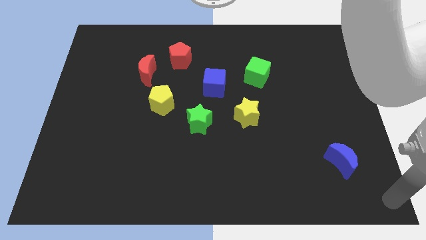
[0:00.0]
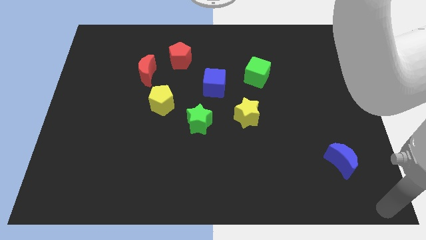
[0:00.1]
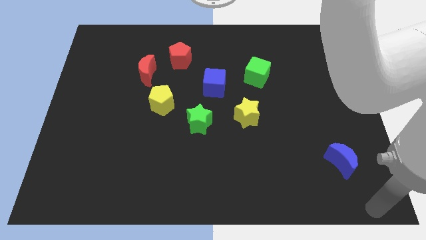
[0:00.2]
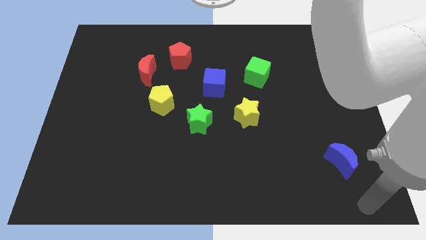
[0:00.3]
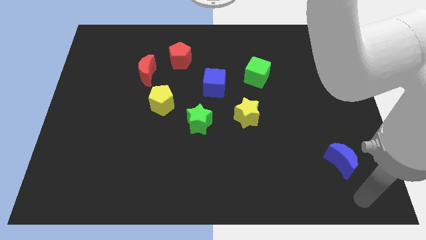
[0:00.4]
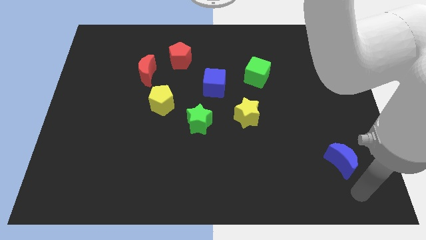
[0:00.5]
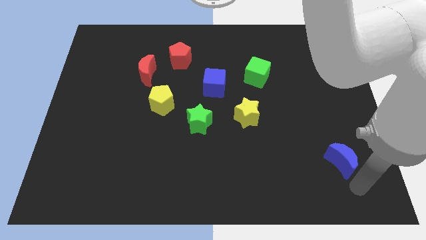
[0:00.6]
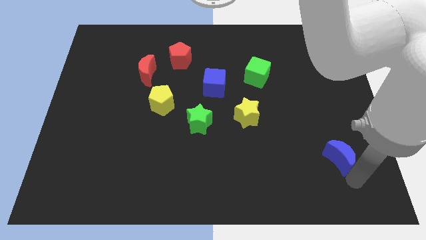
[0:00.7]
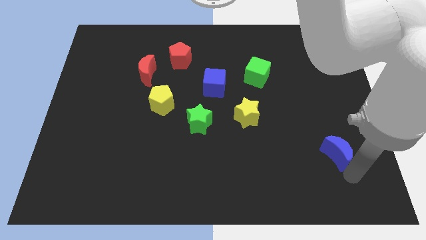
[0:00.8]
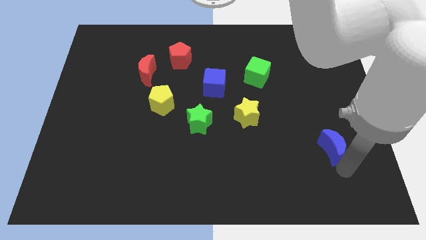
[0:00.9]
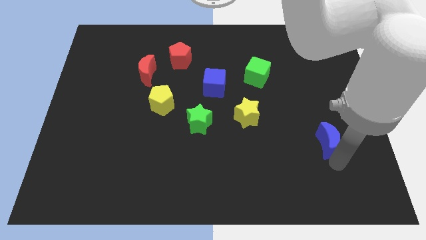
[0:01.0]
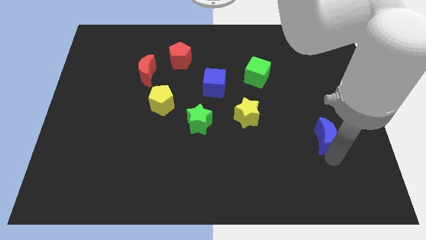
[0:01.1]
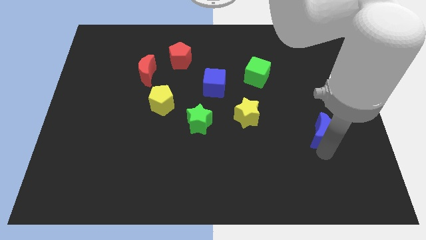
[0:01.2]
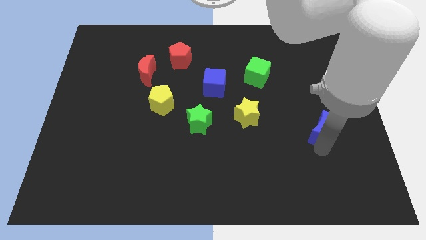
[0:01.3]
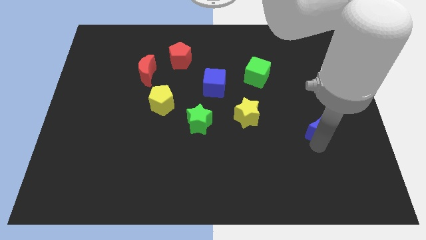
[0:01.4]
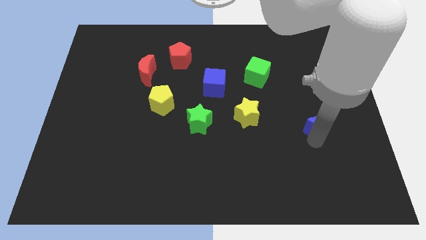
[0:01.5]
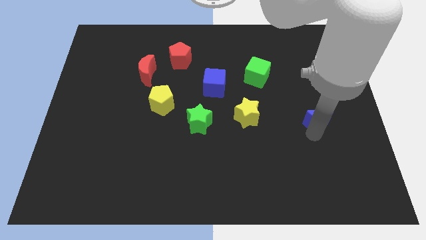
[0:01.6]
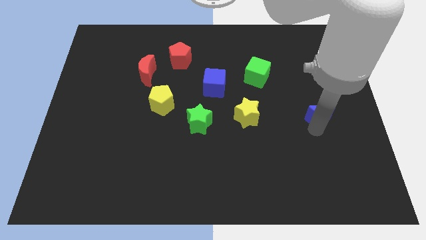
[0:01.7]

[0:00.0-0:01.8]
move the blue moon to the right of yellow star

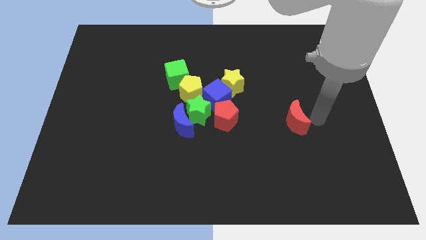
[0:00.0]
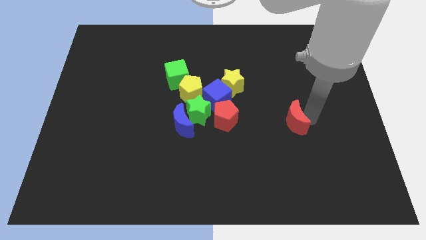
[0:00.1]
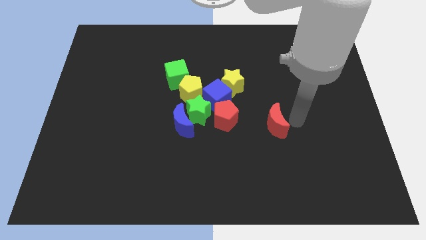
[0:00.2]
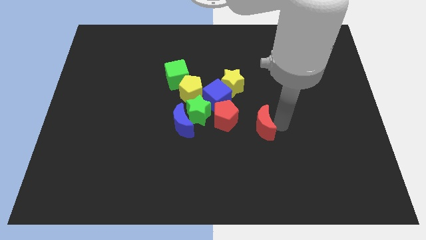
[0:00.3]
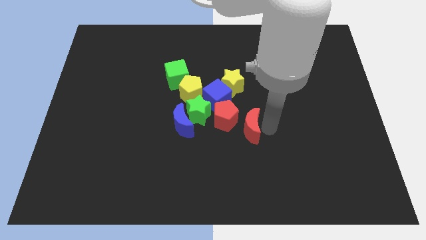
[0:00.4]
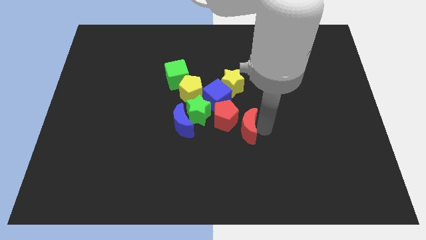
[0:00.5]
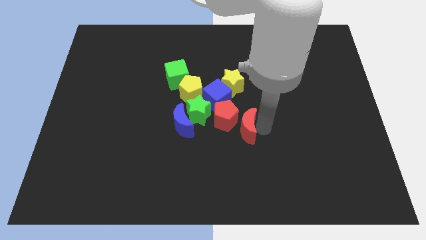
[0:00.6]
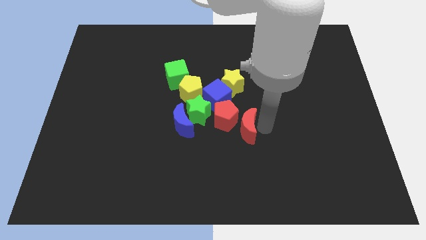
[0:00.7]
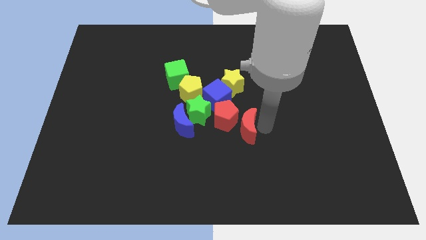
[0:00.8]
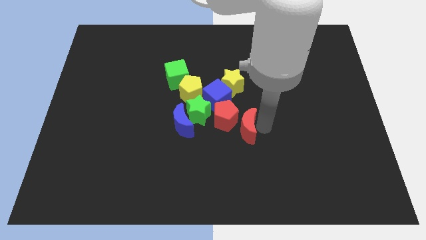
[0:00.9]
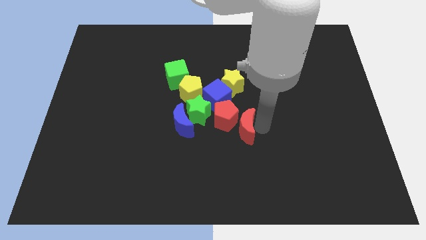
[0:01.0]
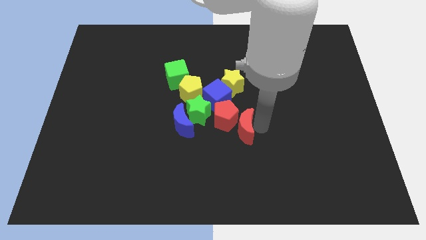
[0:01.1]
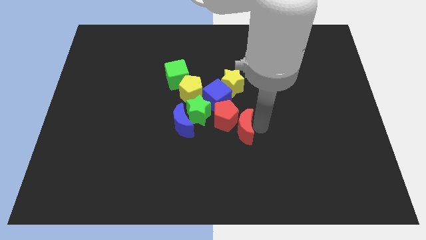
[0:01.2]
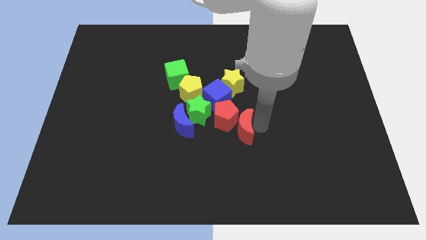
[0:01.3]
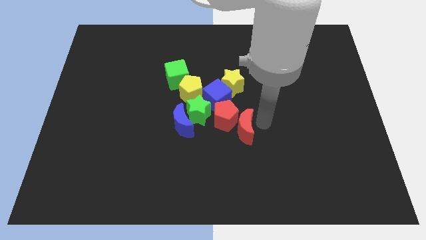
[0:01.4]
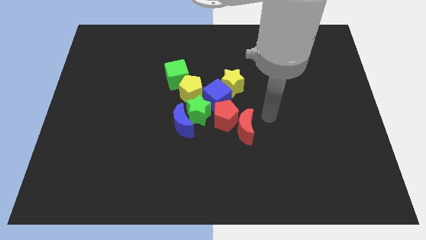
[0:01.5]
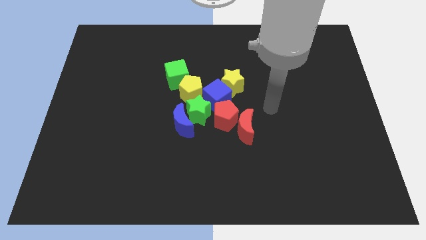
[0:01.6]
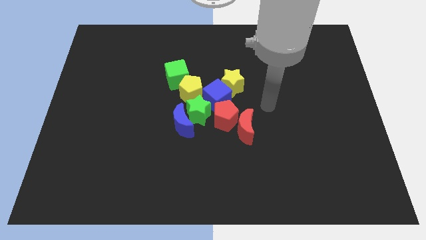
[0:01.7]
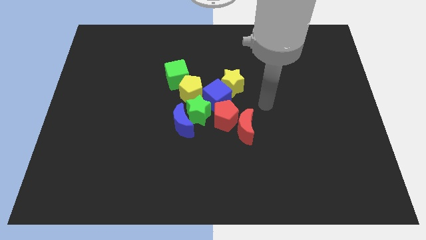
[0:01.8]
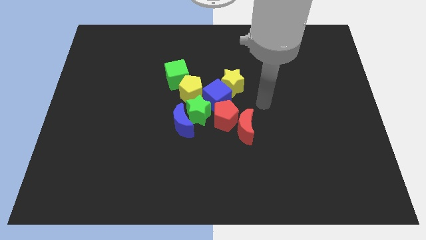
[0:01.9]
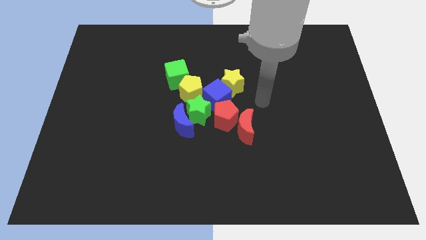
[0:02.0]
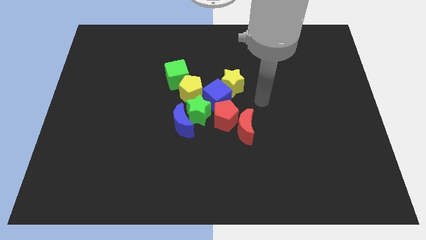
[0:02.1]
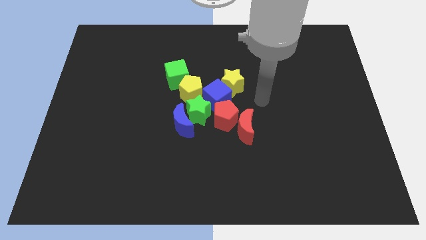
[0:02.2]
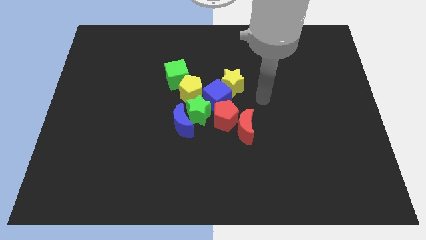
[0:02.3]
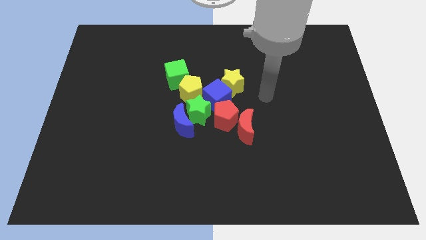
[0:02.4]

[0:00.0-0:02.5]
move the red crescent into the red pentagon

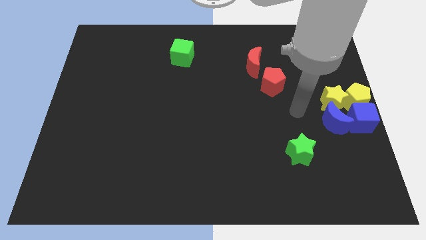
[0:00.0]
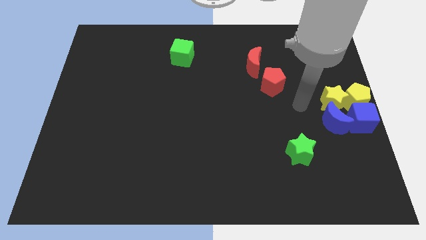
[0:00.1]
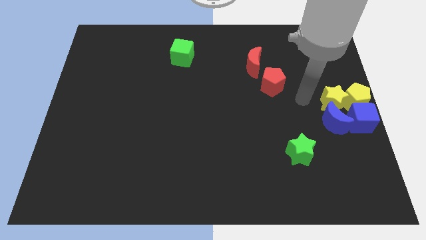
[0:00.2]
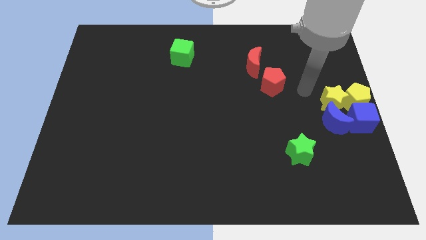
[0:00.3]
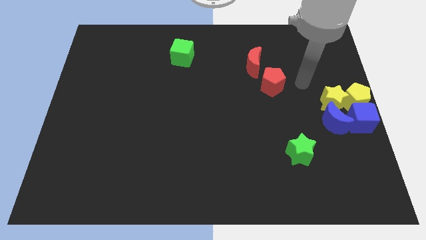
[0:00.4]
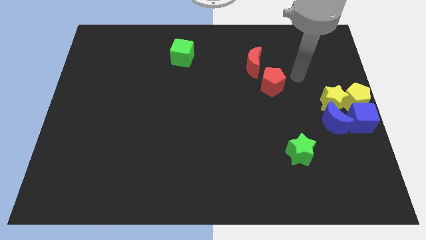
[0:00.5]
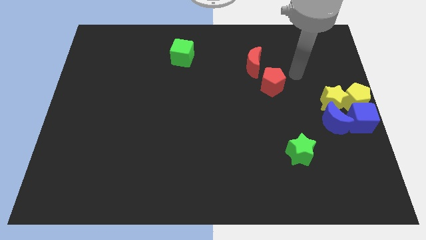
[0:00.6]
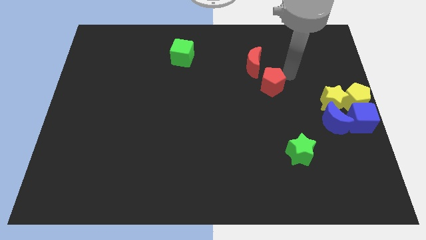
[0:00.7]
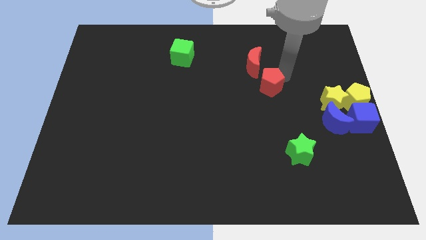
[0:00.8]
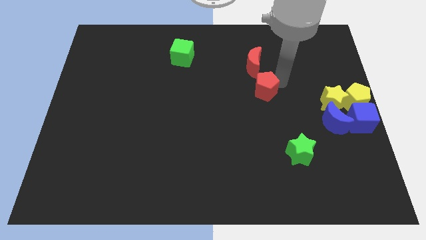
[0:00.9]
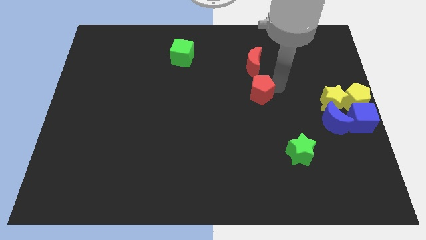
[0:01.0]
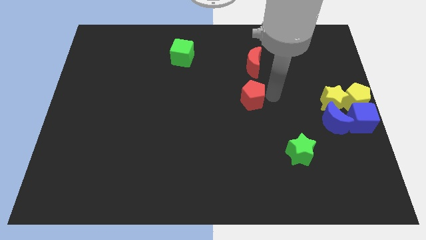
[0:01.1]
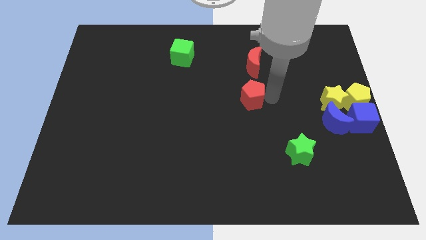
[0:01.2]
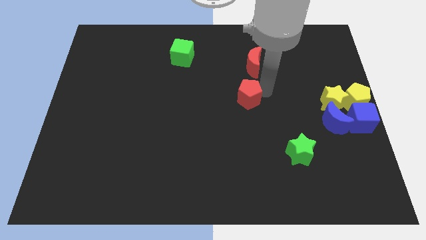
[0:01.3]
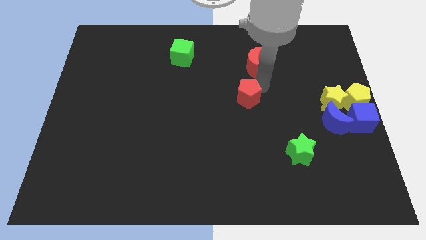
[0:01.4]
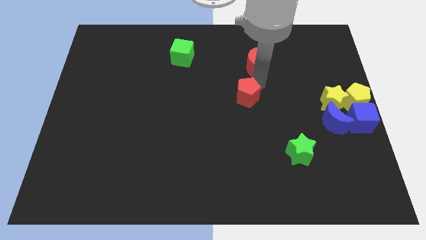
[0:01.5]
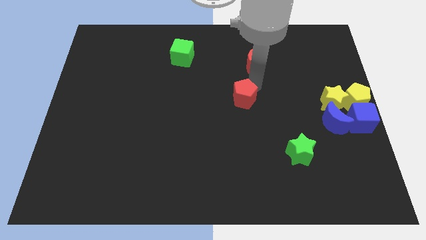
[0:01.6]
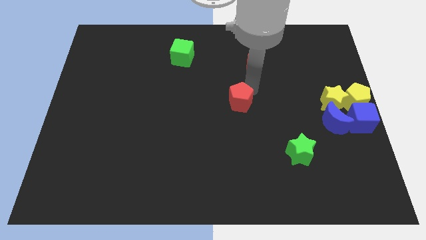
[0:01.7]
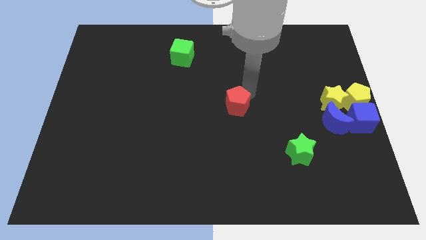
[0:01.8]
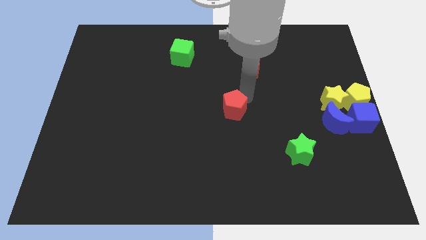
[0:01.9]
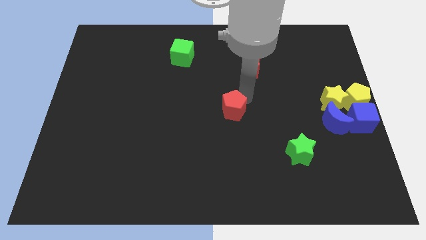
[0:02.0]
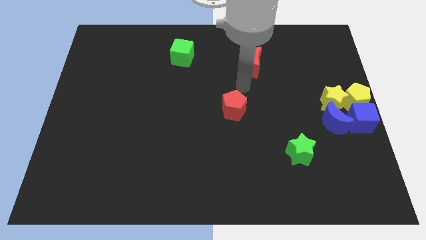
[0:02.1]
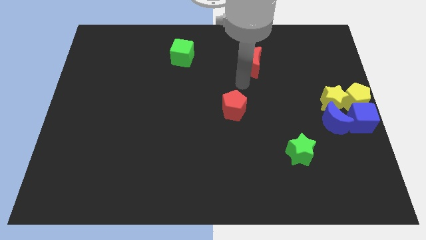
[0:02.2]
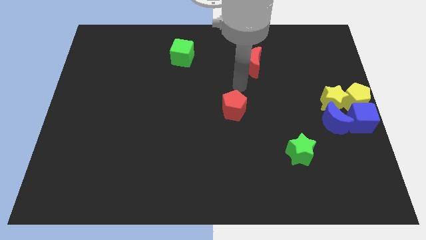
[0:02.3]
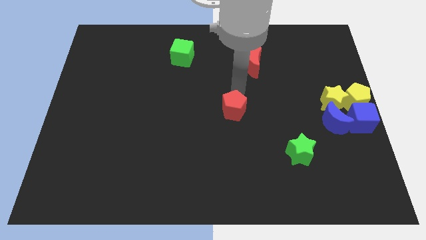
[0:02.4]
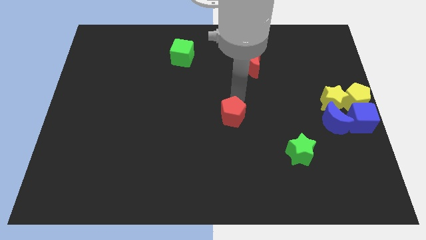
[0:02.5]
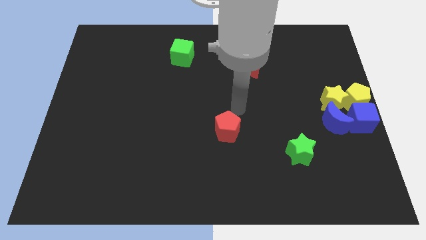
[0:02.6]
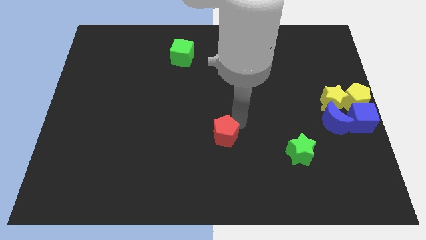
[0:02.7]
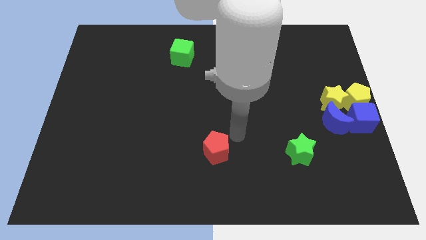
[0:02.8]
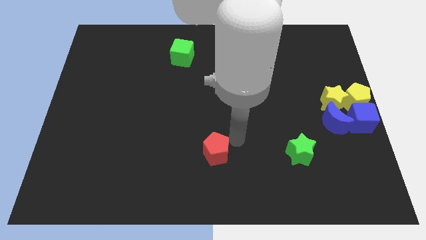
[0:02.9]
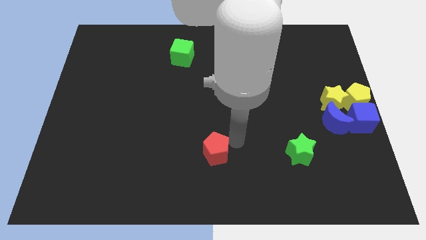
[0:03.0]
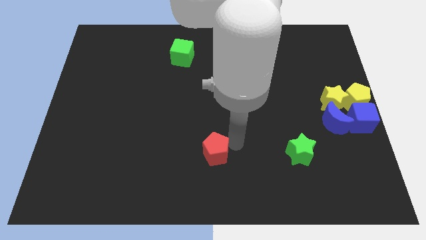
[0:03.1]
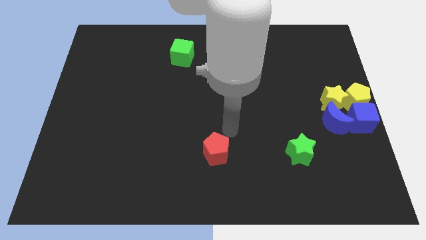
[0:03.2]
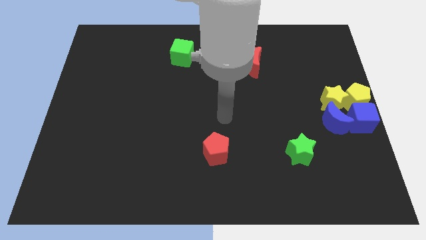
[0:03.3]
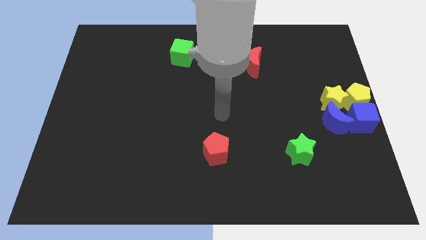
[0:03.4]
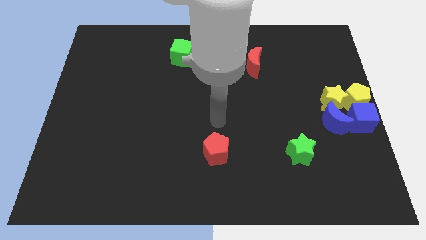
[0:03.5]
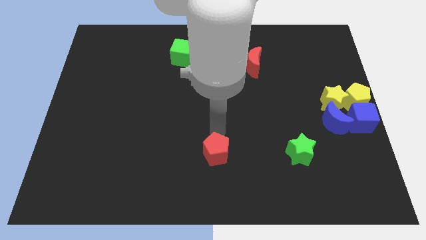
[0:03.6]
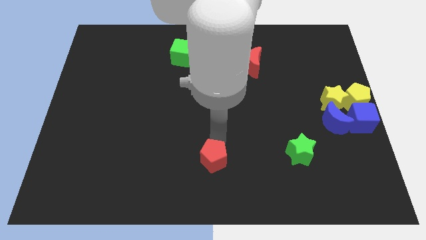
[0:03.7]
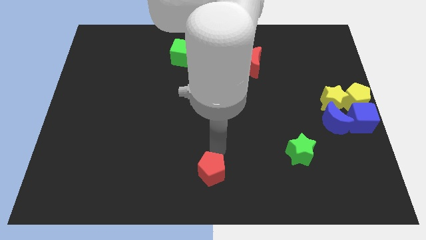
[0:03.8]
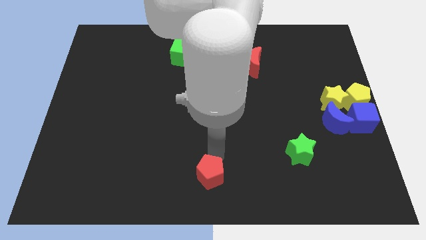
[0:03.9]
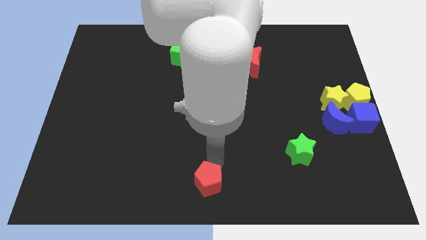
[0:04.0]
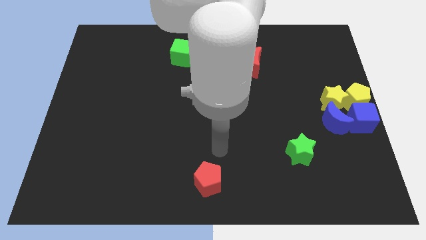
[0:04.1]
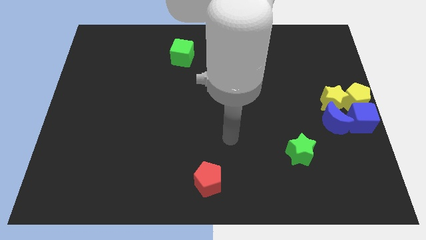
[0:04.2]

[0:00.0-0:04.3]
place the red pentagon at the bottom center of the board

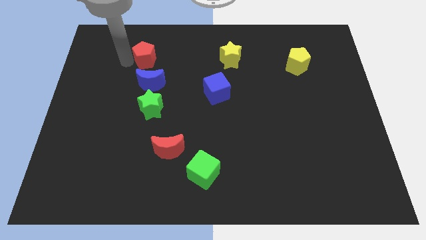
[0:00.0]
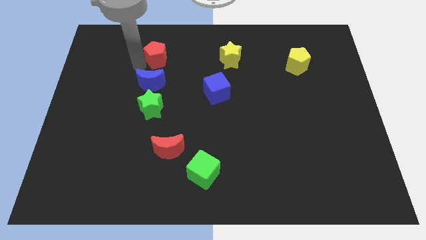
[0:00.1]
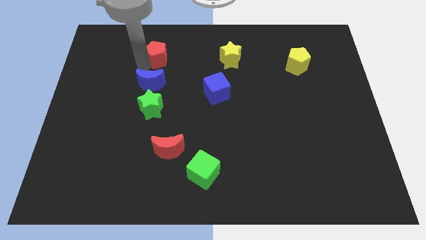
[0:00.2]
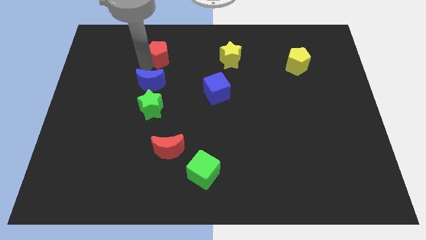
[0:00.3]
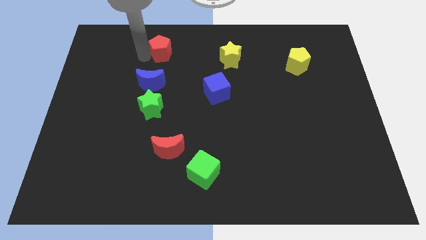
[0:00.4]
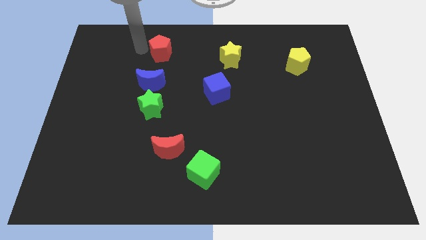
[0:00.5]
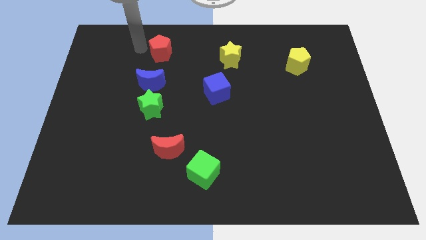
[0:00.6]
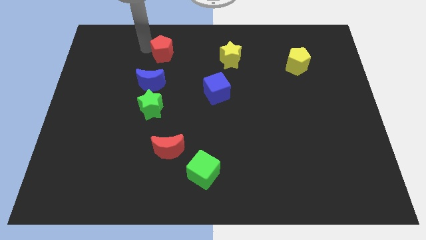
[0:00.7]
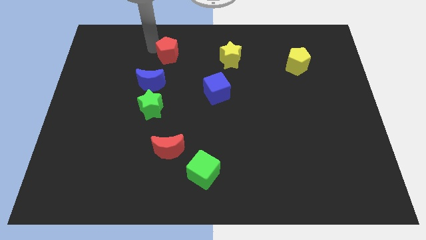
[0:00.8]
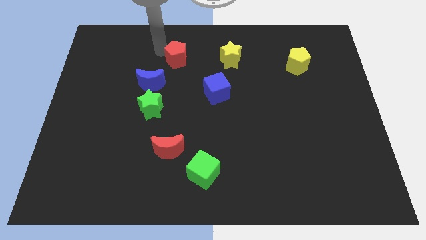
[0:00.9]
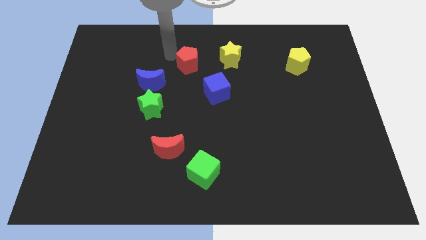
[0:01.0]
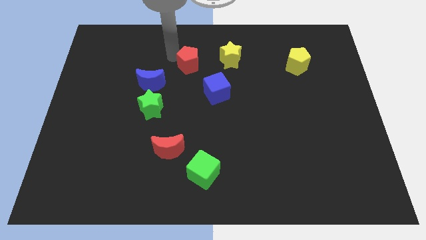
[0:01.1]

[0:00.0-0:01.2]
place the red pentagon diagonally to the blue crescent
